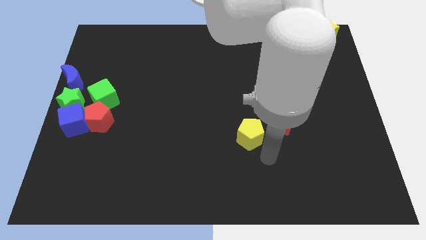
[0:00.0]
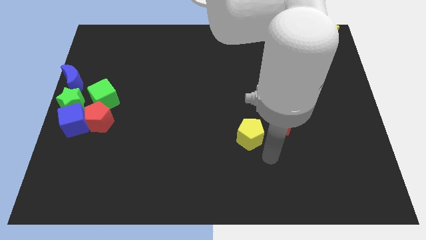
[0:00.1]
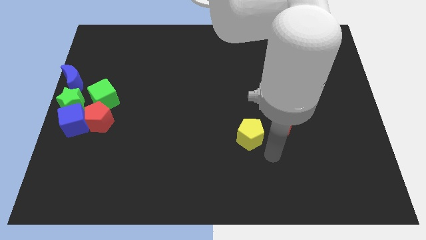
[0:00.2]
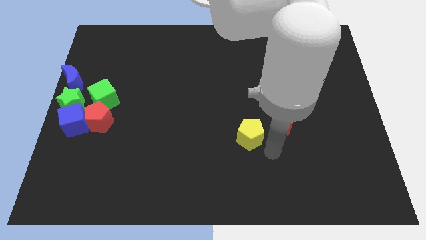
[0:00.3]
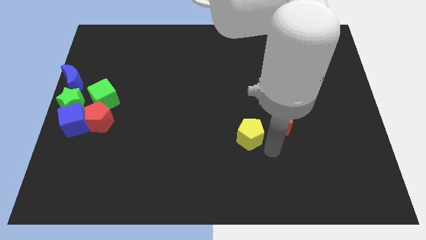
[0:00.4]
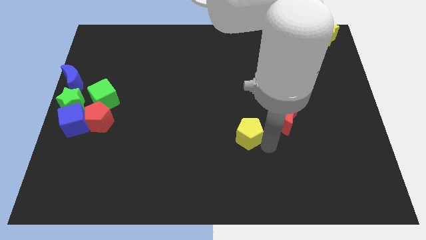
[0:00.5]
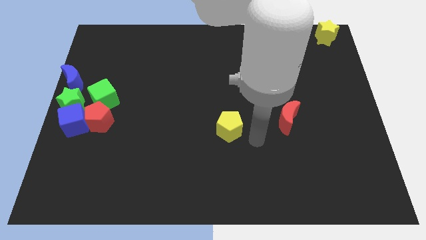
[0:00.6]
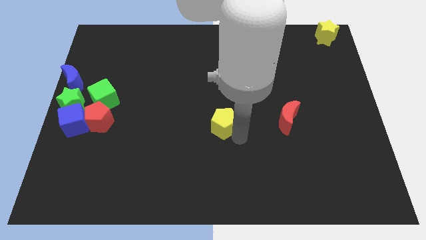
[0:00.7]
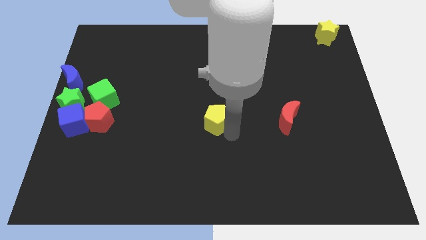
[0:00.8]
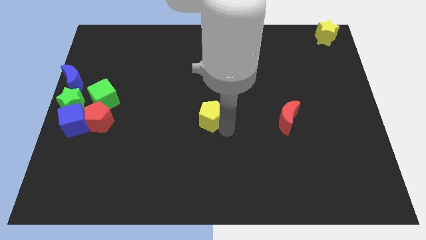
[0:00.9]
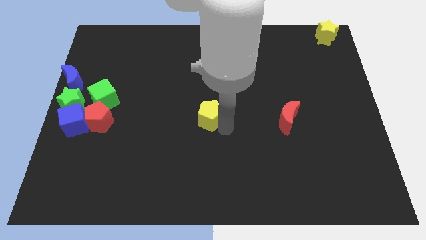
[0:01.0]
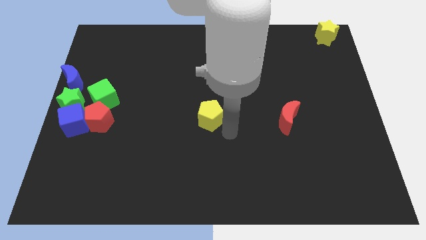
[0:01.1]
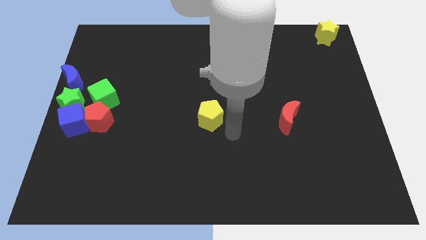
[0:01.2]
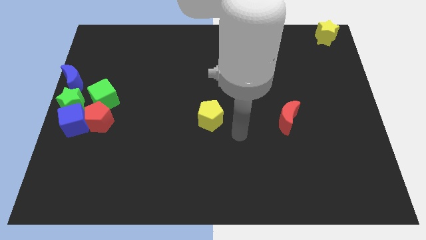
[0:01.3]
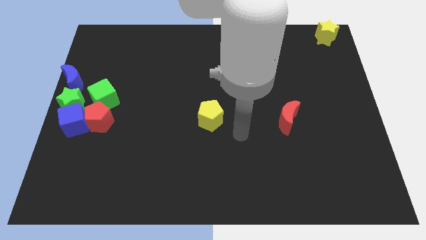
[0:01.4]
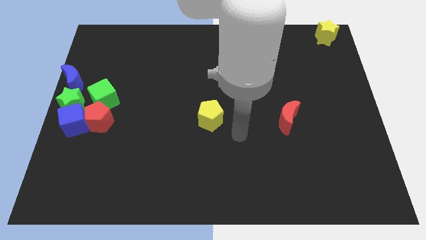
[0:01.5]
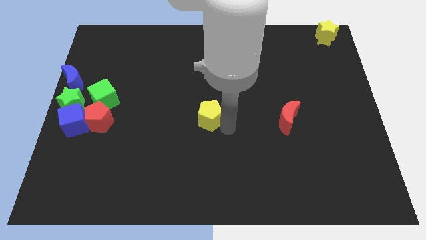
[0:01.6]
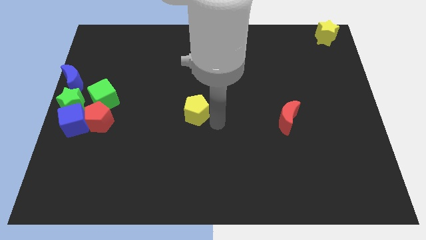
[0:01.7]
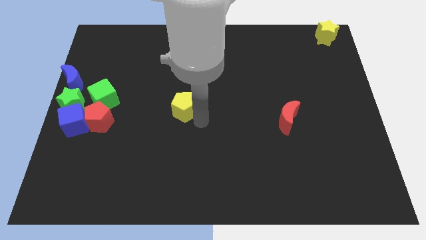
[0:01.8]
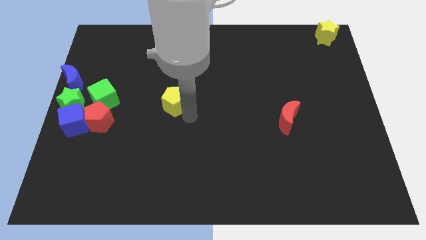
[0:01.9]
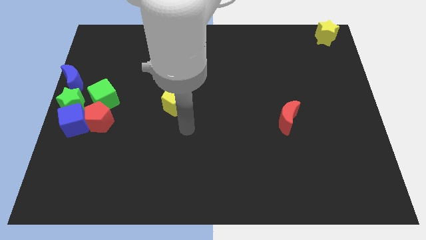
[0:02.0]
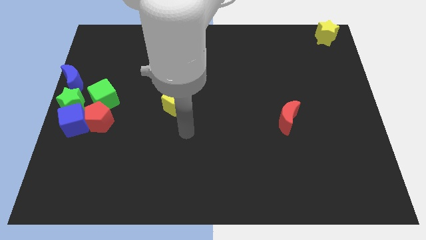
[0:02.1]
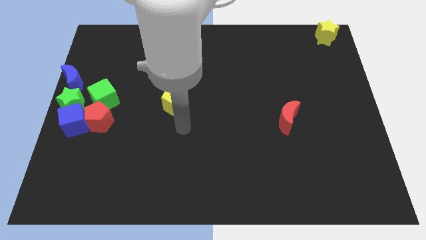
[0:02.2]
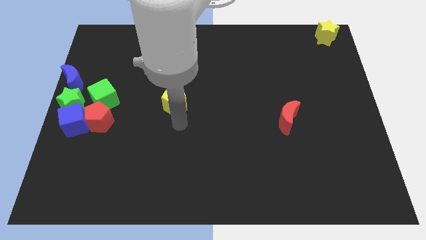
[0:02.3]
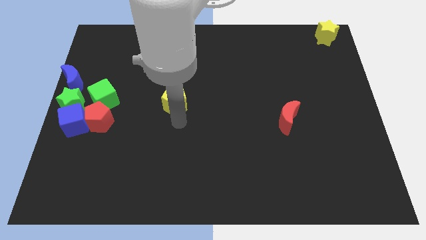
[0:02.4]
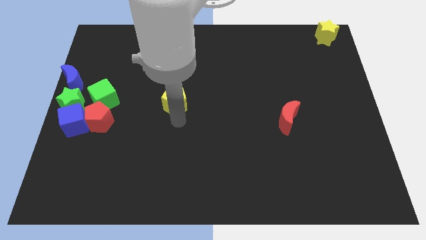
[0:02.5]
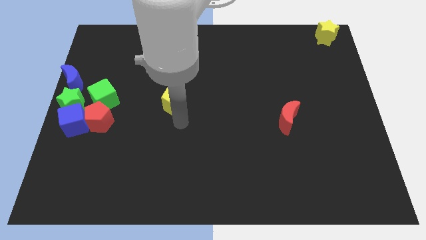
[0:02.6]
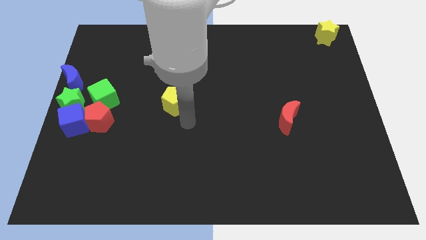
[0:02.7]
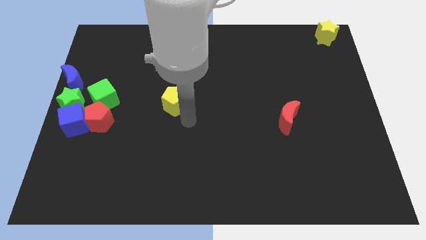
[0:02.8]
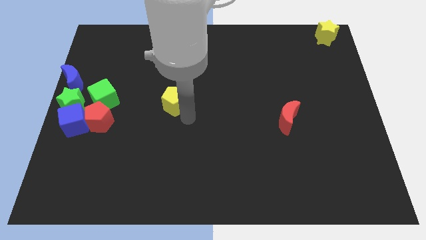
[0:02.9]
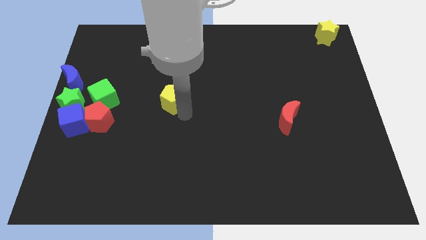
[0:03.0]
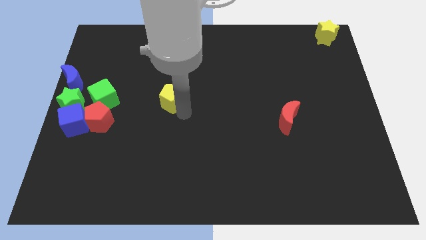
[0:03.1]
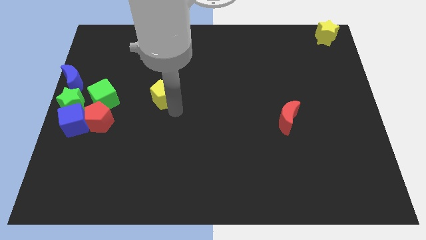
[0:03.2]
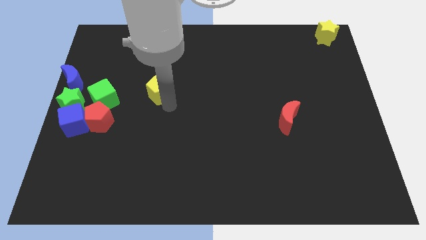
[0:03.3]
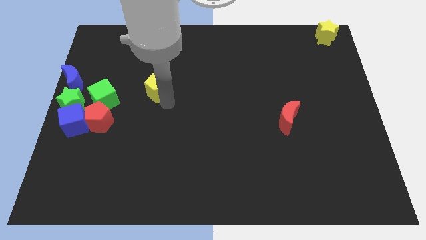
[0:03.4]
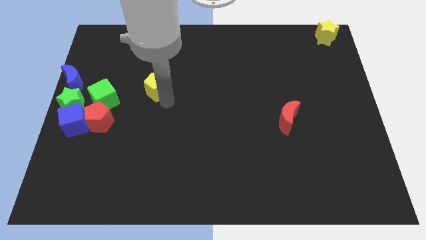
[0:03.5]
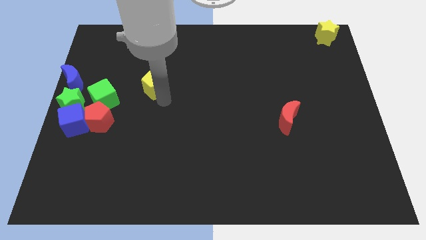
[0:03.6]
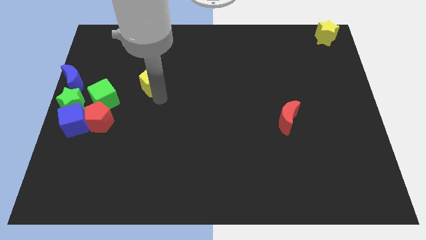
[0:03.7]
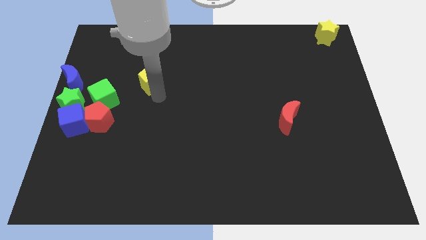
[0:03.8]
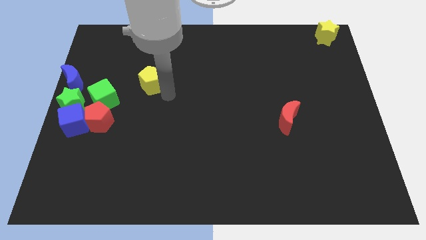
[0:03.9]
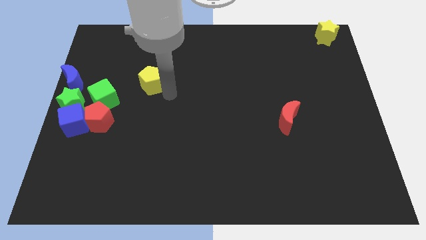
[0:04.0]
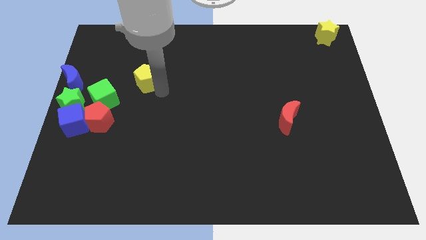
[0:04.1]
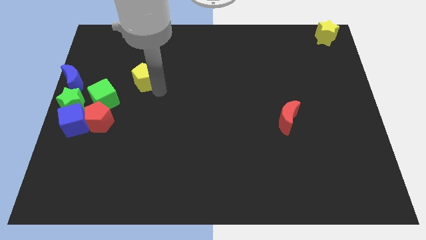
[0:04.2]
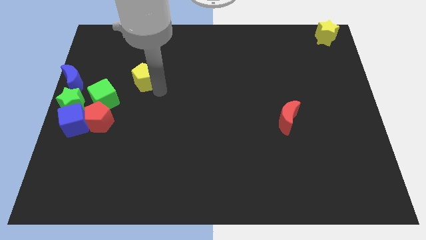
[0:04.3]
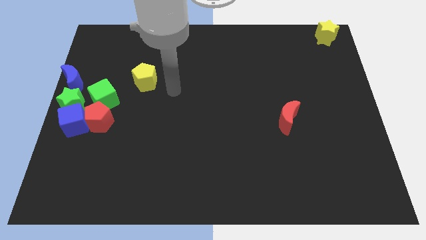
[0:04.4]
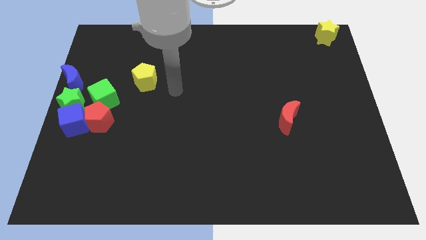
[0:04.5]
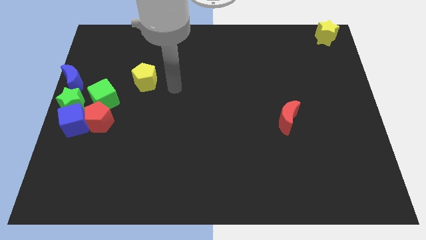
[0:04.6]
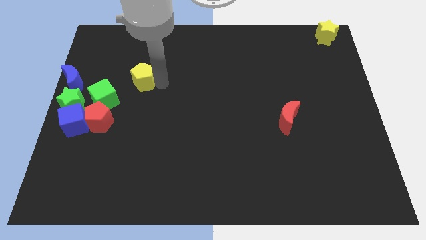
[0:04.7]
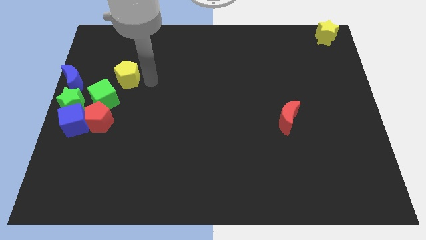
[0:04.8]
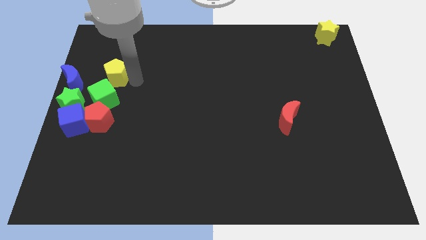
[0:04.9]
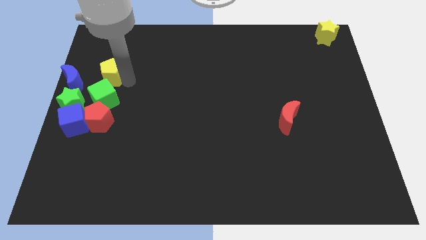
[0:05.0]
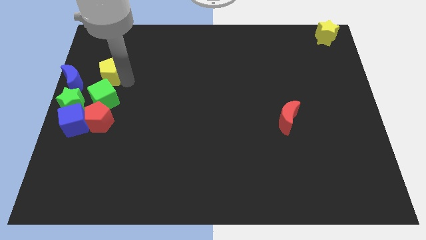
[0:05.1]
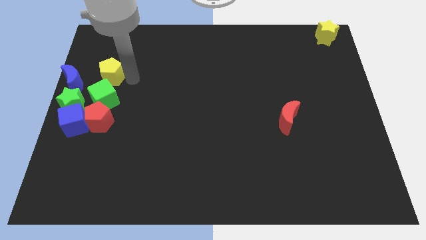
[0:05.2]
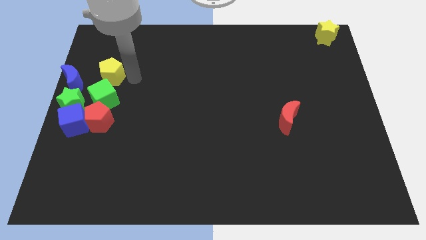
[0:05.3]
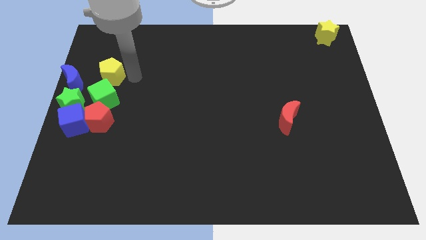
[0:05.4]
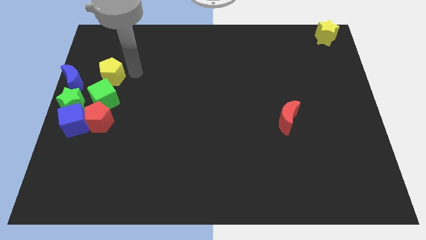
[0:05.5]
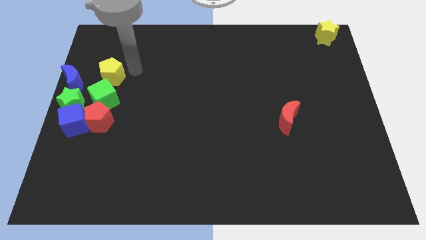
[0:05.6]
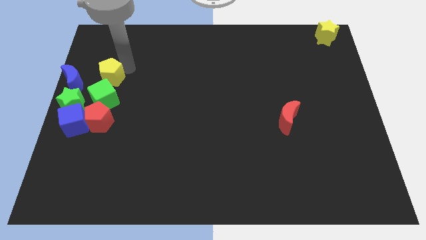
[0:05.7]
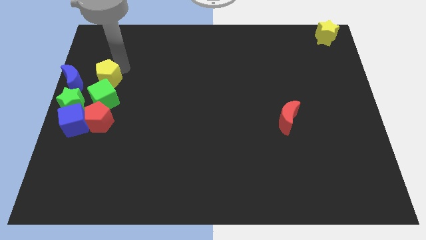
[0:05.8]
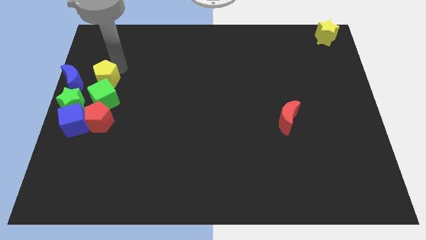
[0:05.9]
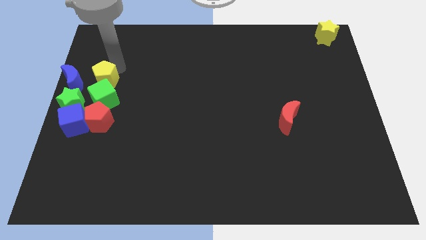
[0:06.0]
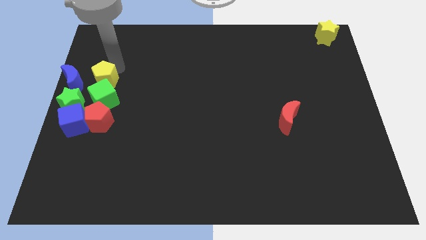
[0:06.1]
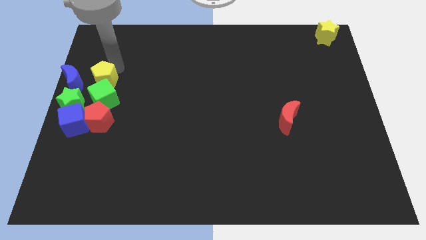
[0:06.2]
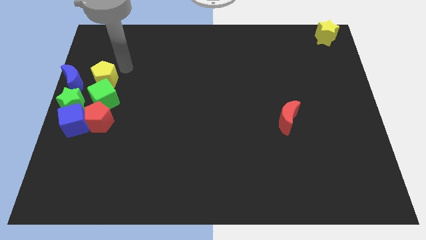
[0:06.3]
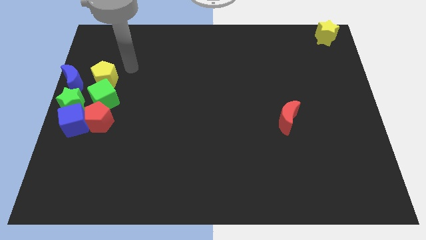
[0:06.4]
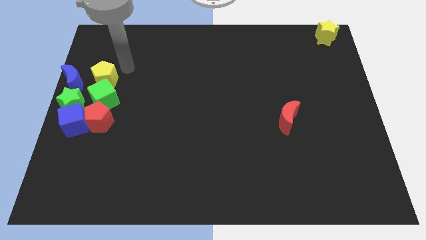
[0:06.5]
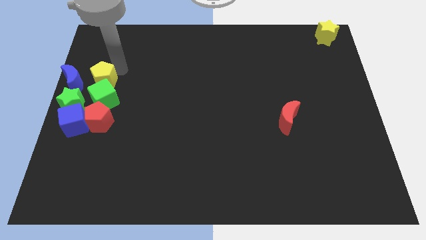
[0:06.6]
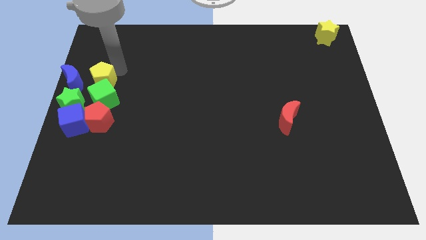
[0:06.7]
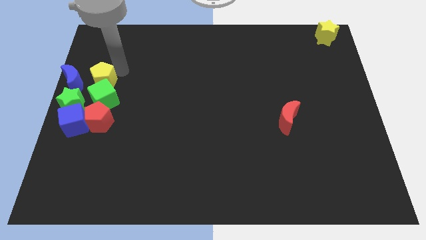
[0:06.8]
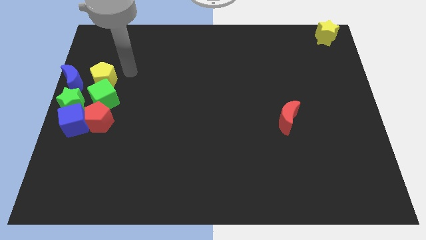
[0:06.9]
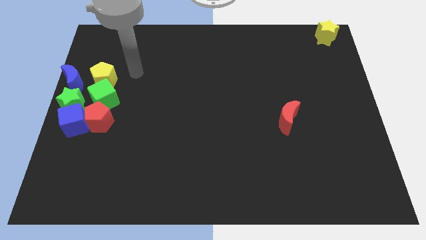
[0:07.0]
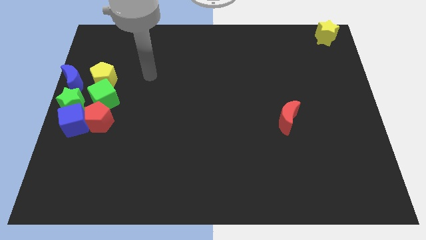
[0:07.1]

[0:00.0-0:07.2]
place the yellow pentagon on top of green cube

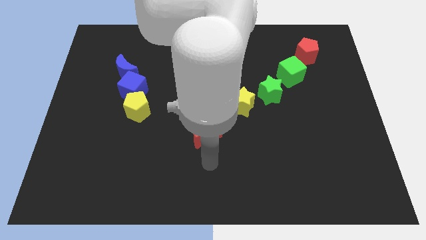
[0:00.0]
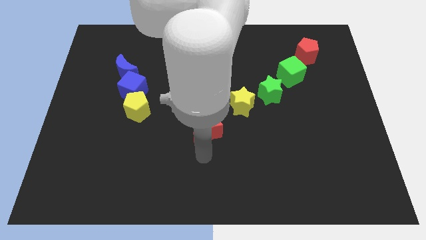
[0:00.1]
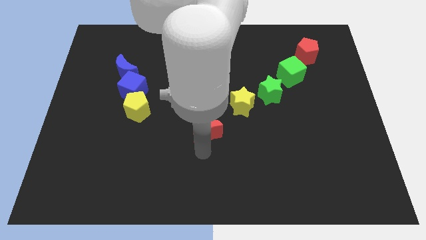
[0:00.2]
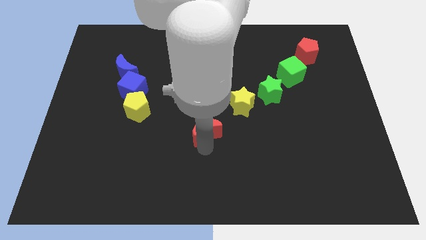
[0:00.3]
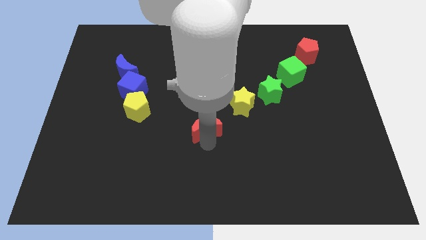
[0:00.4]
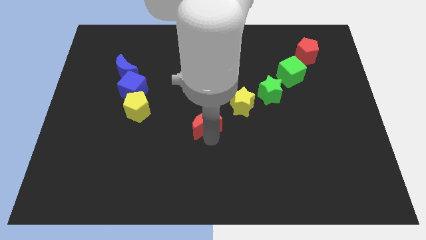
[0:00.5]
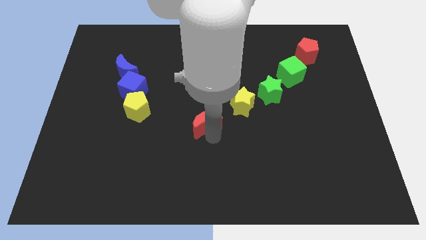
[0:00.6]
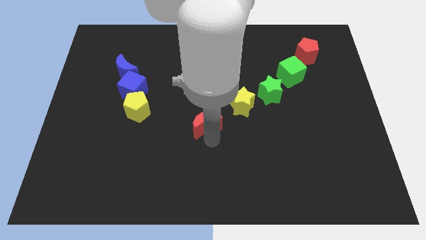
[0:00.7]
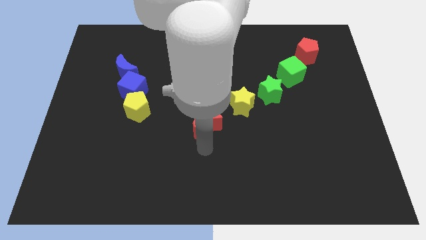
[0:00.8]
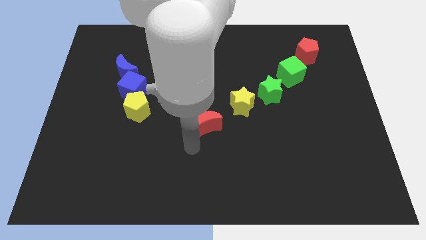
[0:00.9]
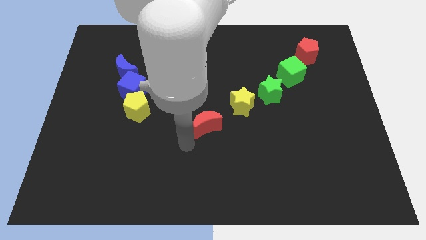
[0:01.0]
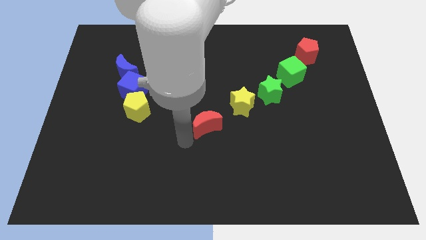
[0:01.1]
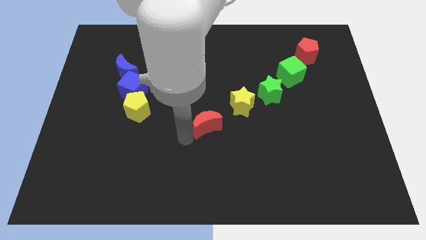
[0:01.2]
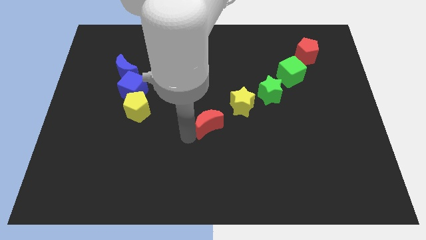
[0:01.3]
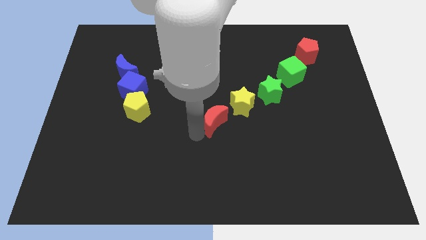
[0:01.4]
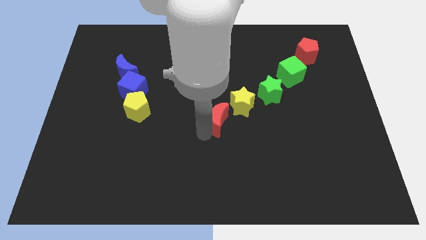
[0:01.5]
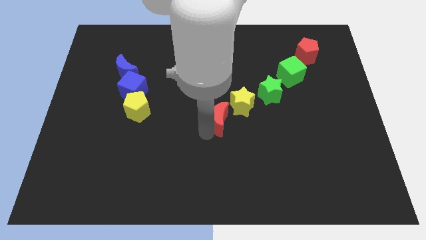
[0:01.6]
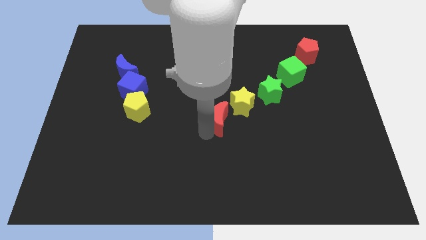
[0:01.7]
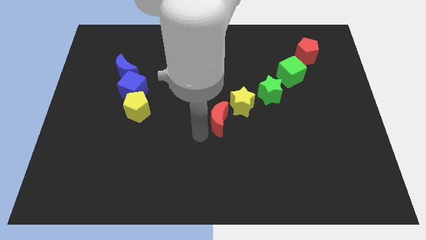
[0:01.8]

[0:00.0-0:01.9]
place the red moon beside the yellow star
